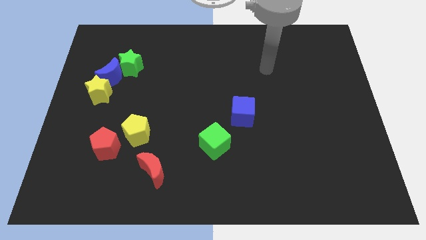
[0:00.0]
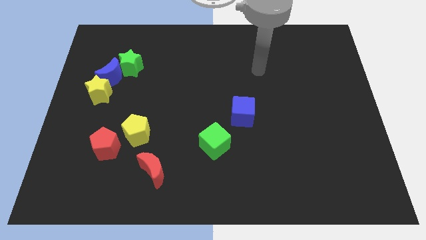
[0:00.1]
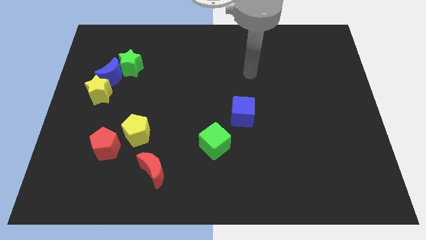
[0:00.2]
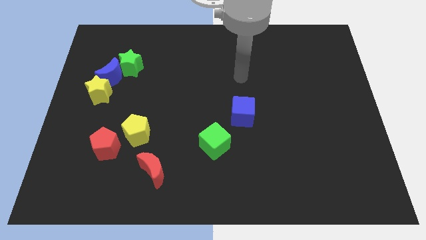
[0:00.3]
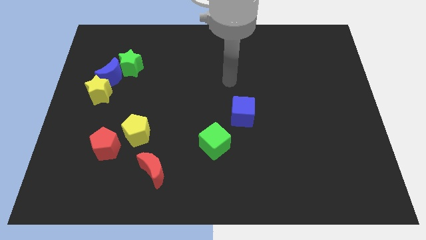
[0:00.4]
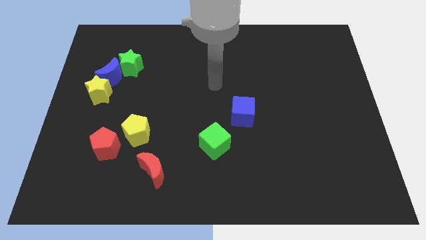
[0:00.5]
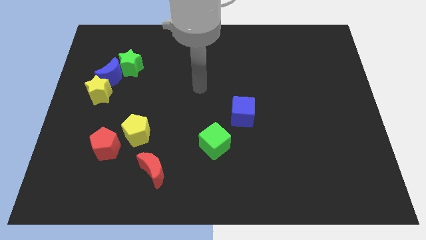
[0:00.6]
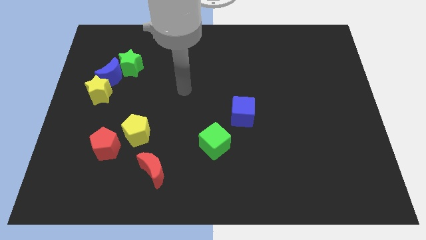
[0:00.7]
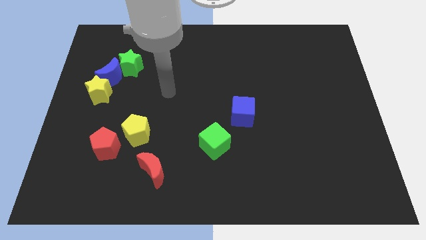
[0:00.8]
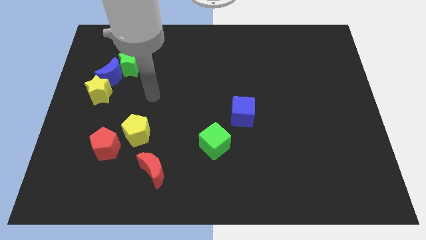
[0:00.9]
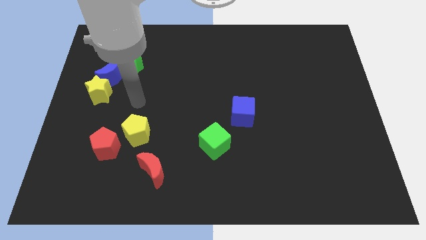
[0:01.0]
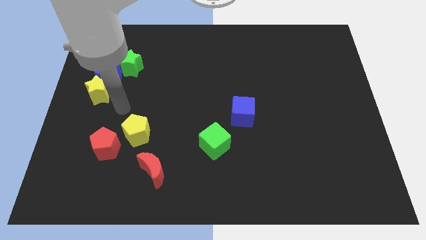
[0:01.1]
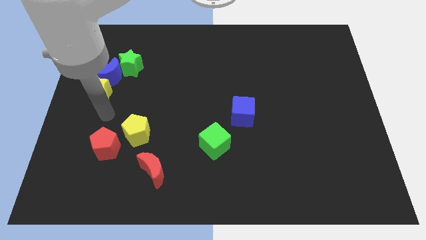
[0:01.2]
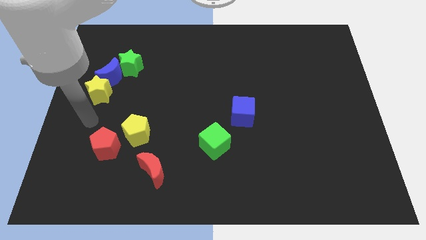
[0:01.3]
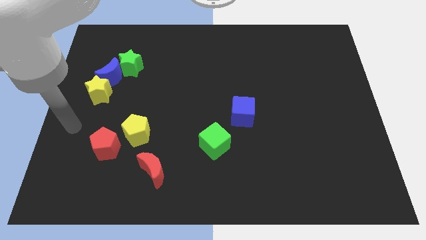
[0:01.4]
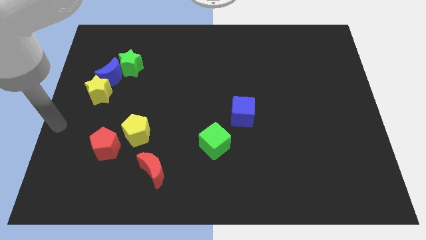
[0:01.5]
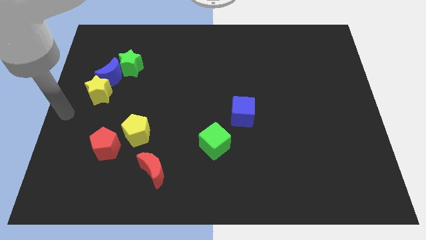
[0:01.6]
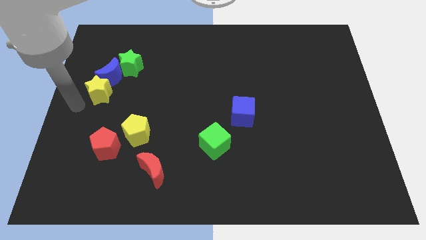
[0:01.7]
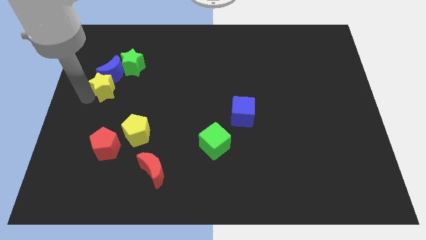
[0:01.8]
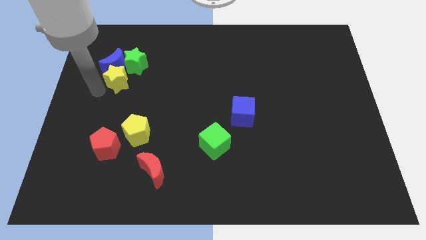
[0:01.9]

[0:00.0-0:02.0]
move the arm around the yellow star

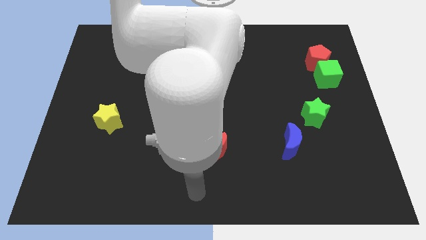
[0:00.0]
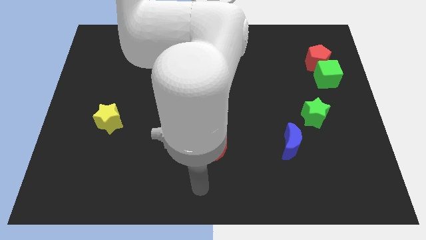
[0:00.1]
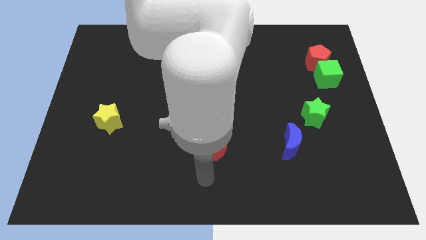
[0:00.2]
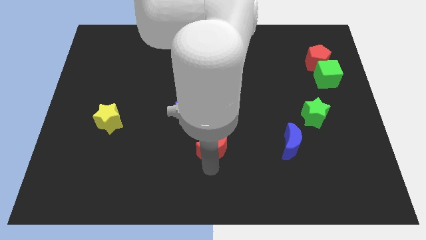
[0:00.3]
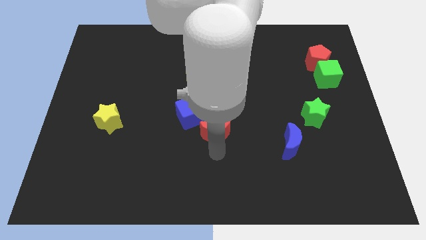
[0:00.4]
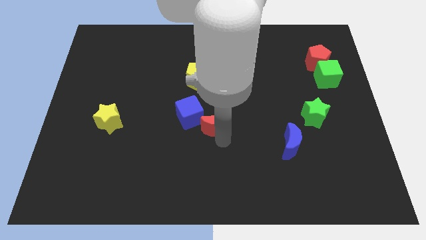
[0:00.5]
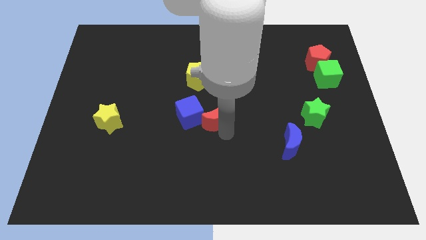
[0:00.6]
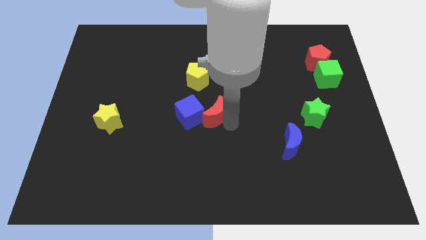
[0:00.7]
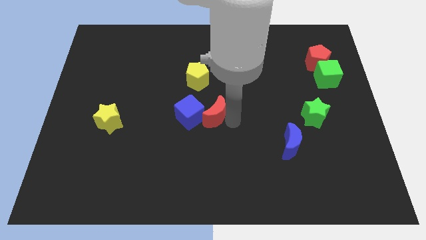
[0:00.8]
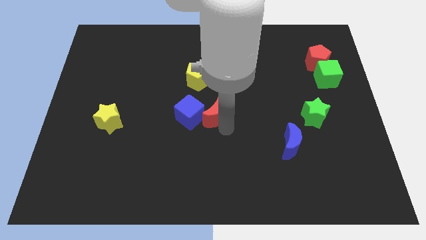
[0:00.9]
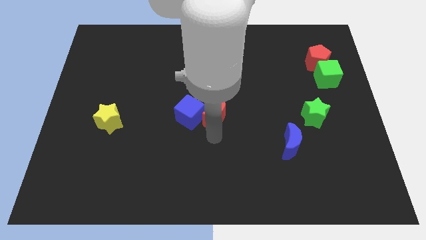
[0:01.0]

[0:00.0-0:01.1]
push the red crescent to the right of the blue cube

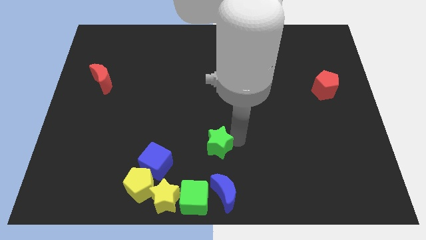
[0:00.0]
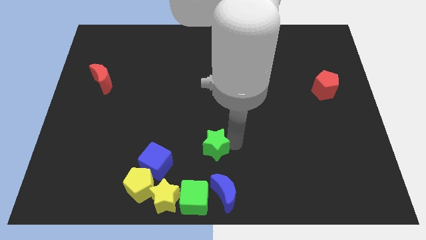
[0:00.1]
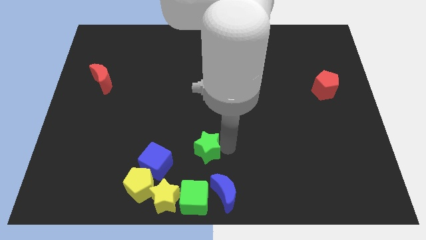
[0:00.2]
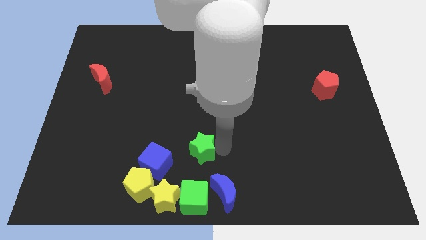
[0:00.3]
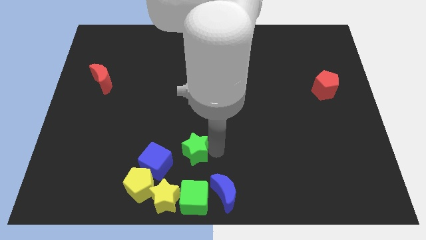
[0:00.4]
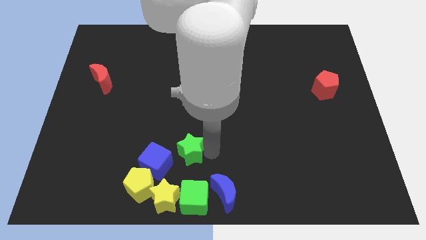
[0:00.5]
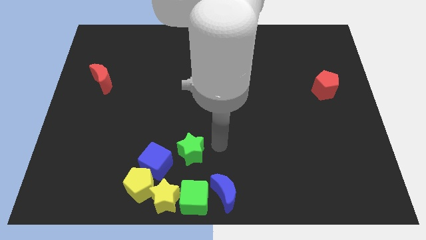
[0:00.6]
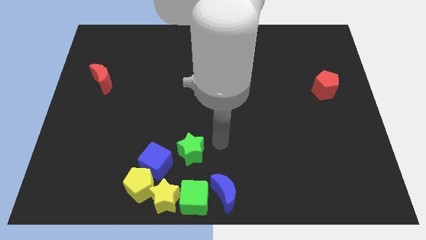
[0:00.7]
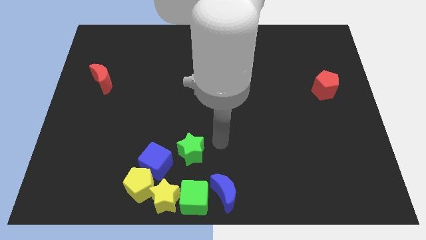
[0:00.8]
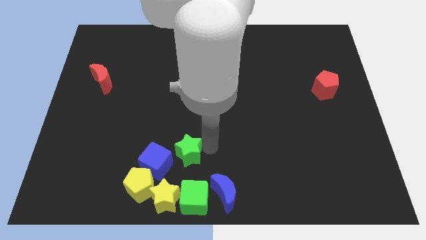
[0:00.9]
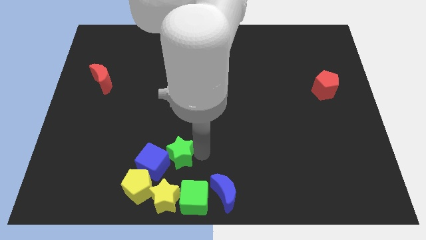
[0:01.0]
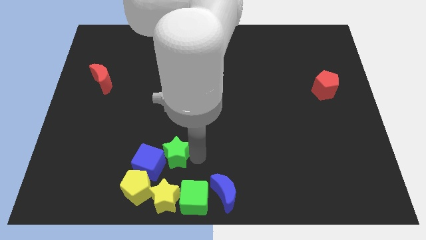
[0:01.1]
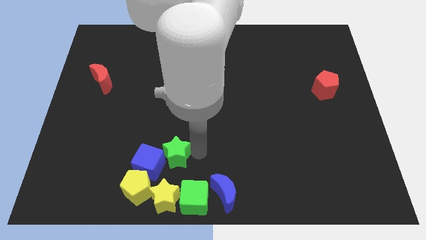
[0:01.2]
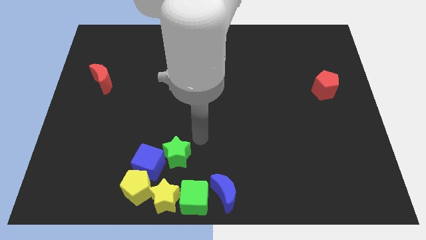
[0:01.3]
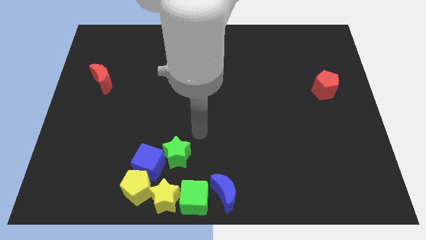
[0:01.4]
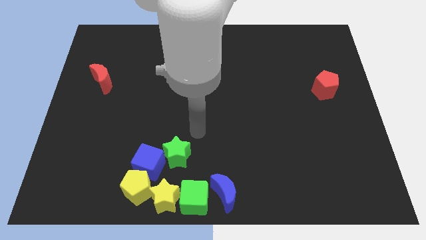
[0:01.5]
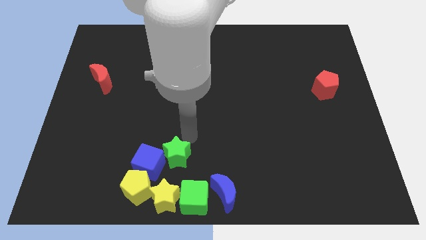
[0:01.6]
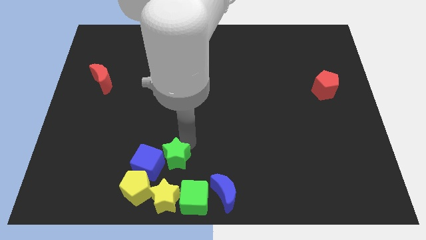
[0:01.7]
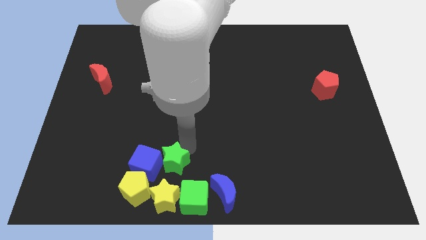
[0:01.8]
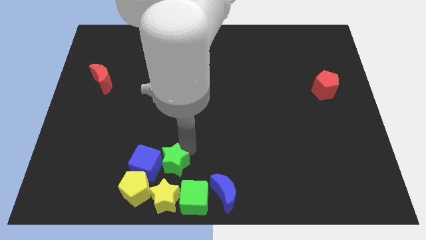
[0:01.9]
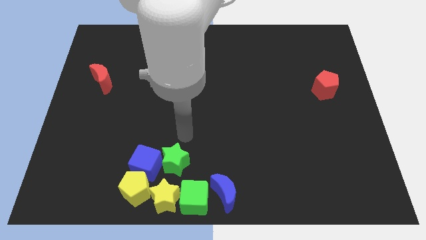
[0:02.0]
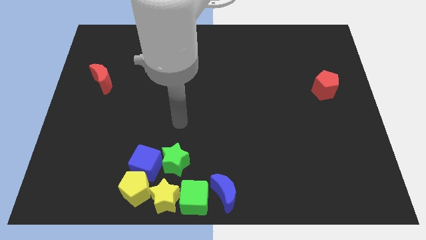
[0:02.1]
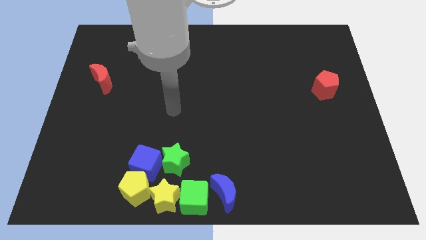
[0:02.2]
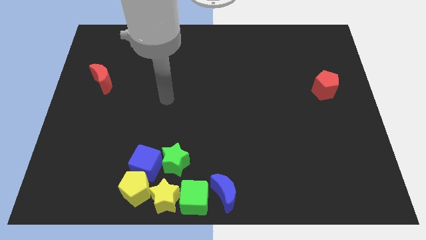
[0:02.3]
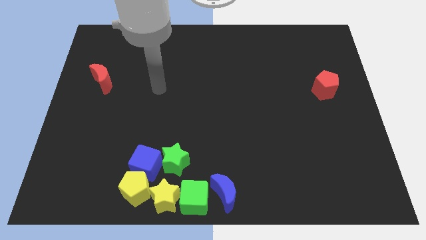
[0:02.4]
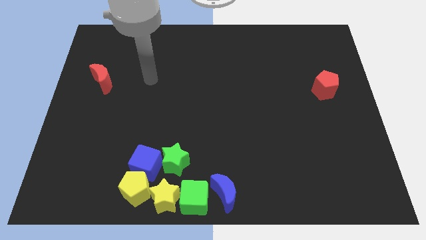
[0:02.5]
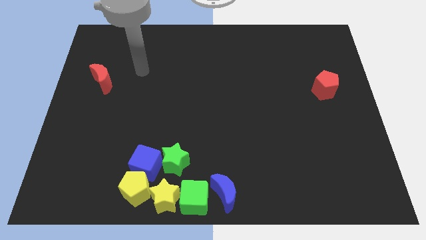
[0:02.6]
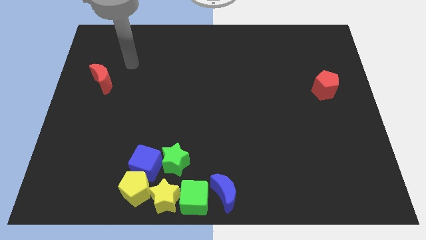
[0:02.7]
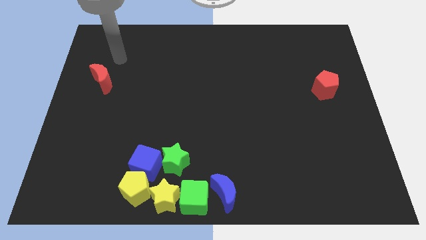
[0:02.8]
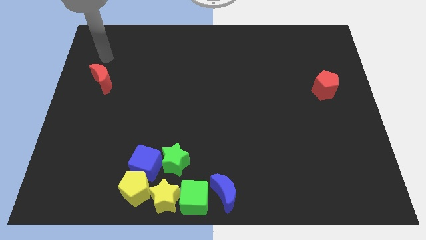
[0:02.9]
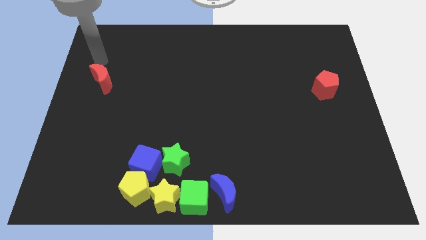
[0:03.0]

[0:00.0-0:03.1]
push the green star into the blue cube

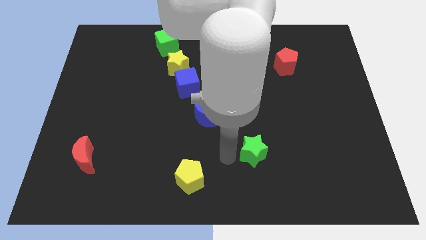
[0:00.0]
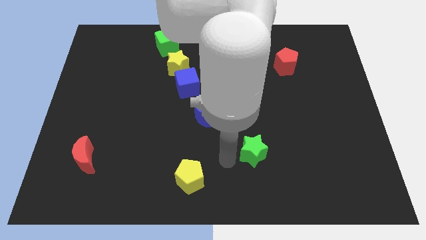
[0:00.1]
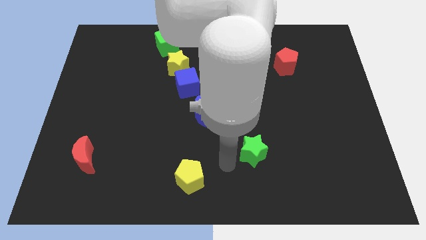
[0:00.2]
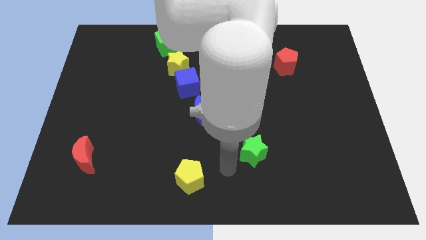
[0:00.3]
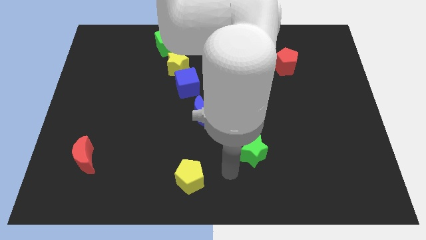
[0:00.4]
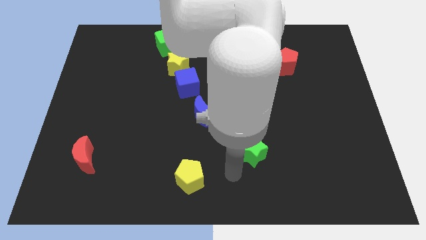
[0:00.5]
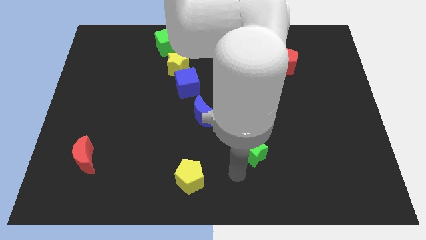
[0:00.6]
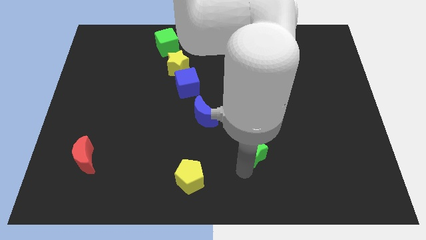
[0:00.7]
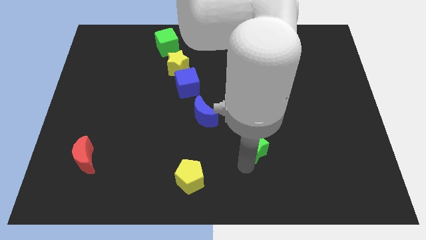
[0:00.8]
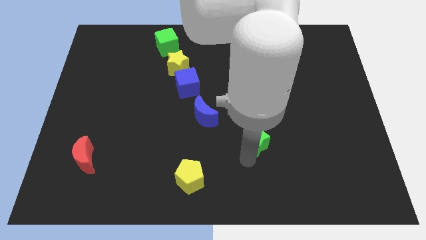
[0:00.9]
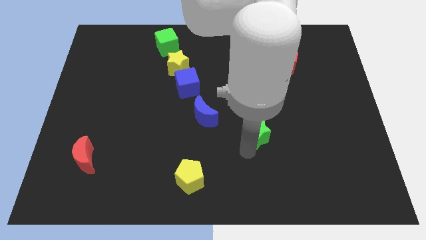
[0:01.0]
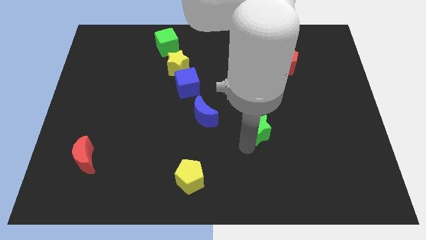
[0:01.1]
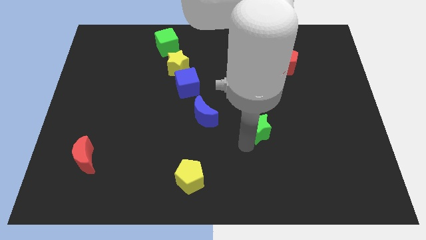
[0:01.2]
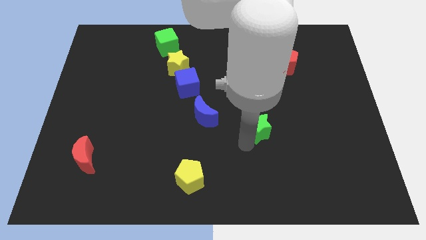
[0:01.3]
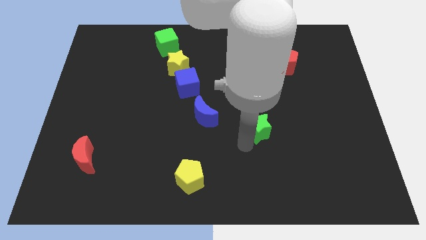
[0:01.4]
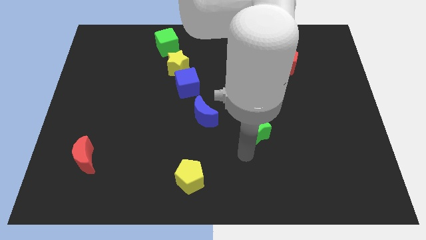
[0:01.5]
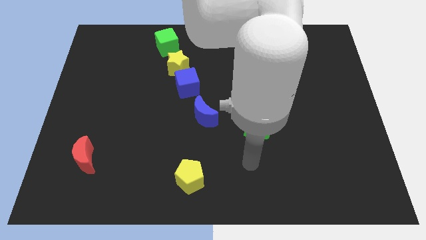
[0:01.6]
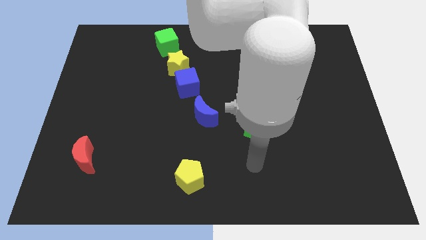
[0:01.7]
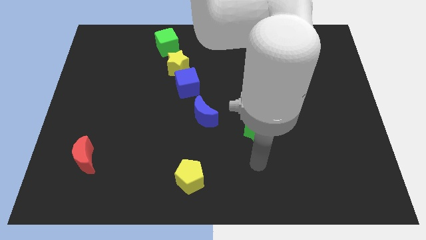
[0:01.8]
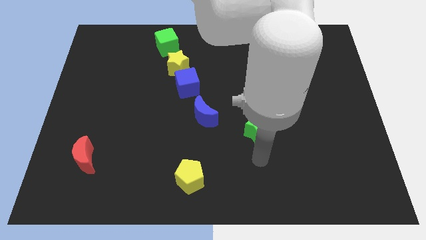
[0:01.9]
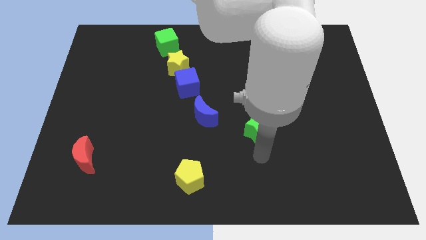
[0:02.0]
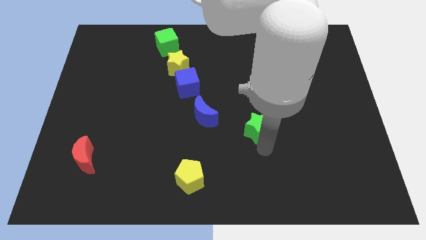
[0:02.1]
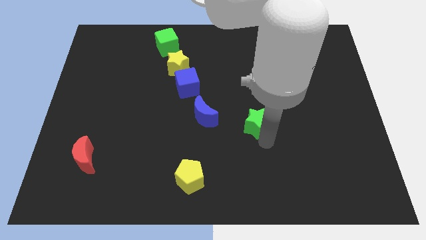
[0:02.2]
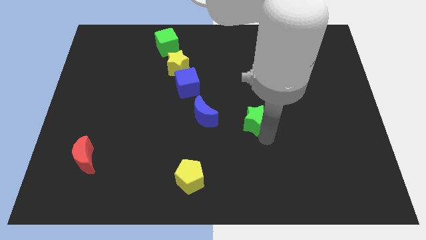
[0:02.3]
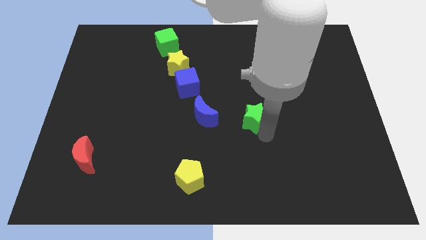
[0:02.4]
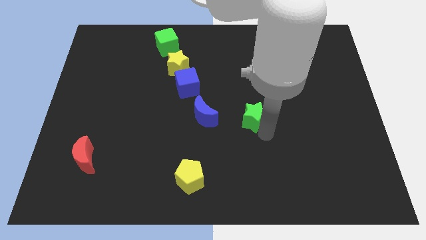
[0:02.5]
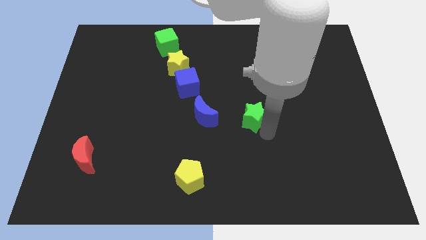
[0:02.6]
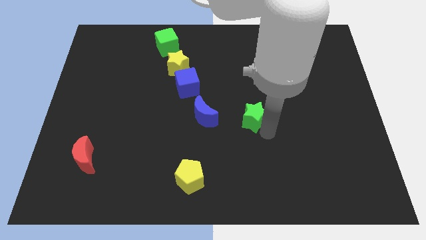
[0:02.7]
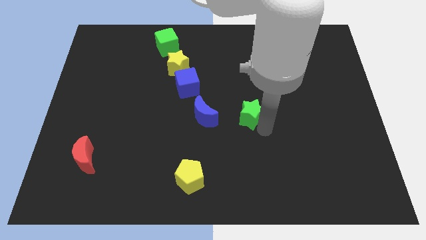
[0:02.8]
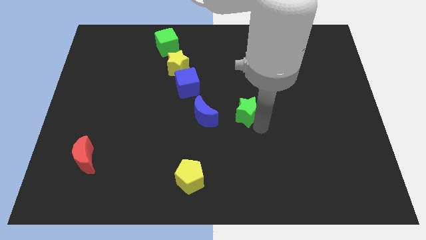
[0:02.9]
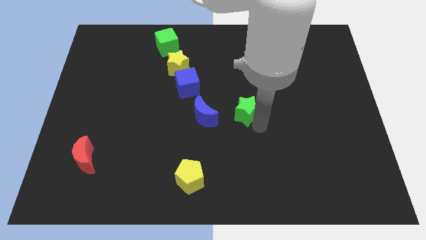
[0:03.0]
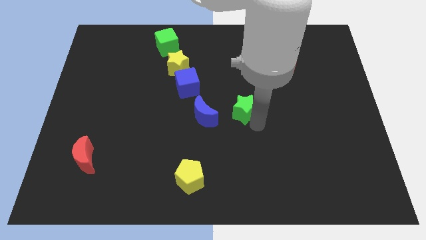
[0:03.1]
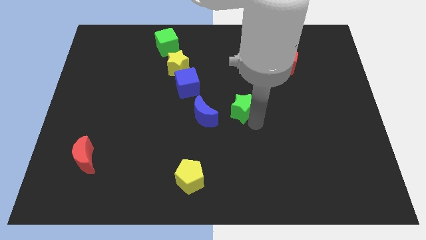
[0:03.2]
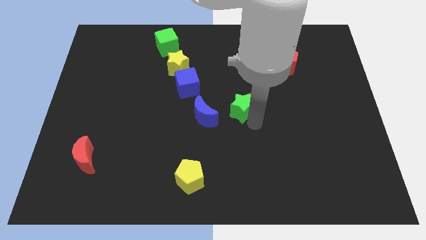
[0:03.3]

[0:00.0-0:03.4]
move the green star to the right side of the blue crescent
